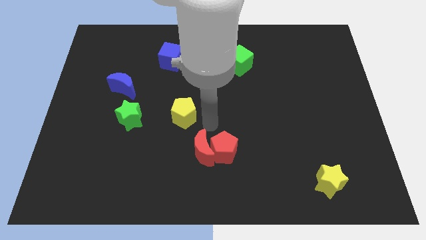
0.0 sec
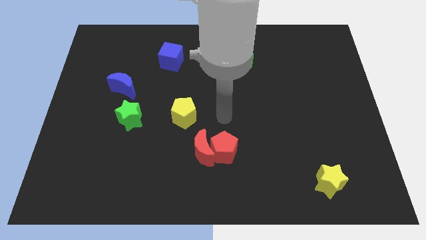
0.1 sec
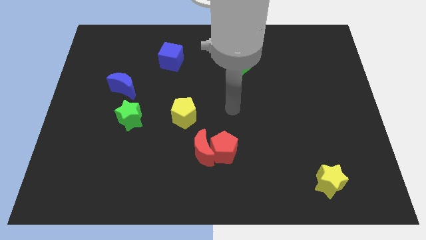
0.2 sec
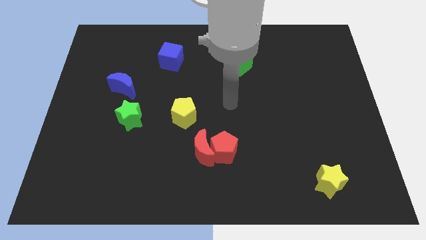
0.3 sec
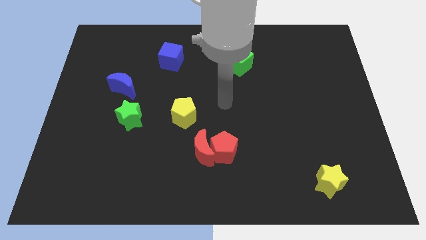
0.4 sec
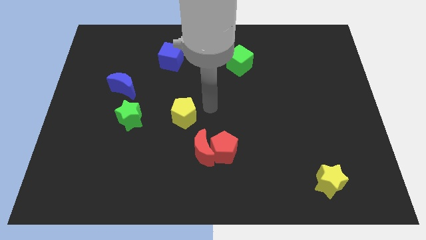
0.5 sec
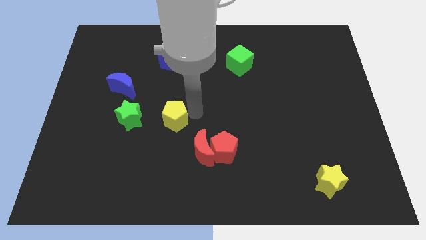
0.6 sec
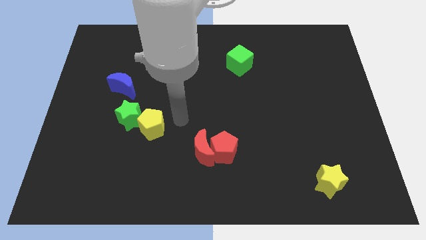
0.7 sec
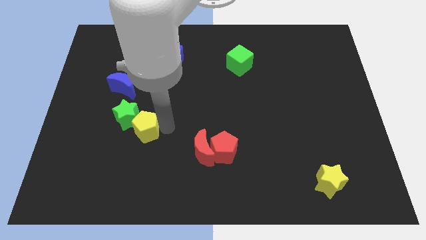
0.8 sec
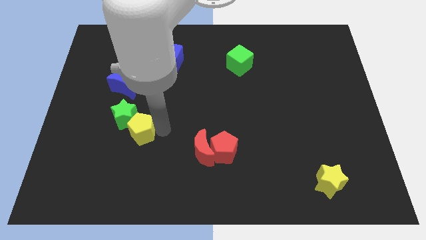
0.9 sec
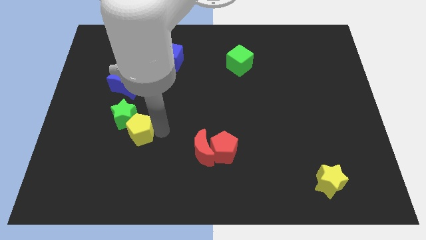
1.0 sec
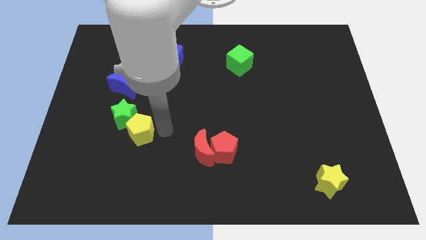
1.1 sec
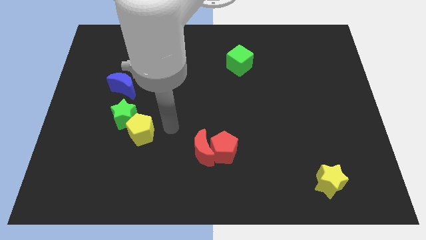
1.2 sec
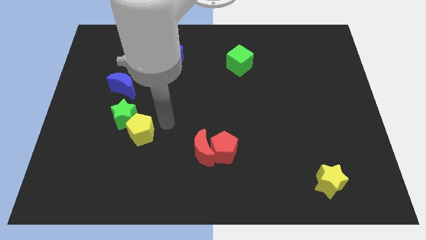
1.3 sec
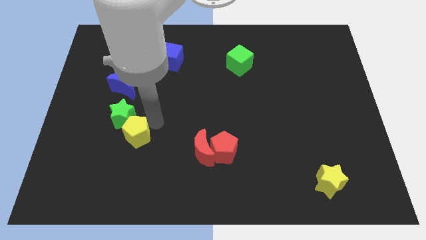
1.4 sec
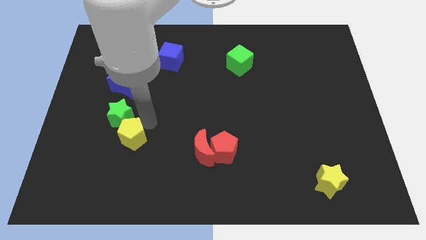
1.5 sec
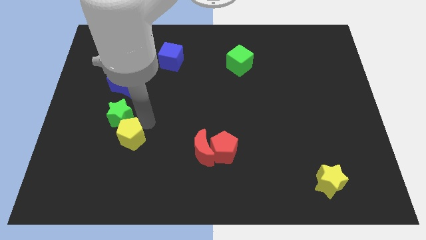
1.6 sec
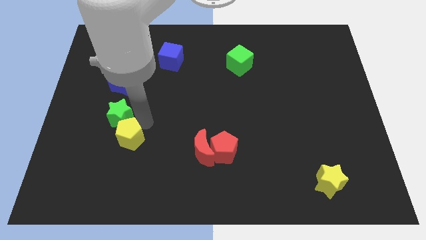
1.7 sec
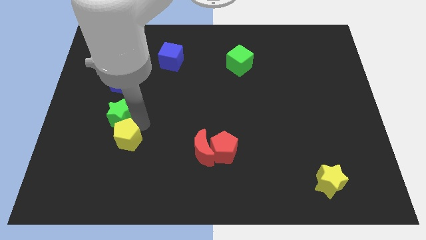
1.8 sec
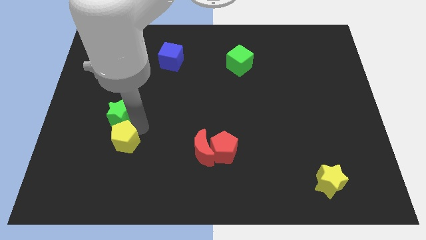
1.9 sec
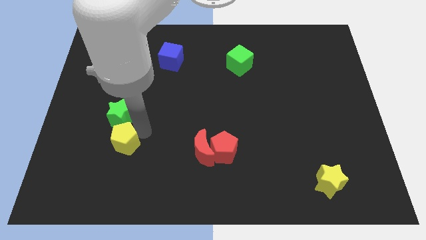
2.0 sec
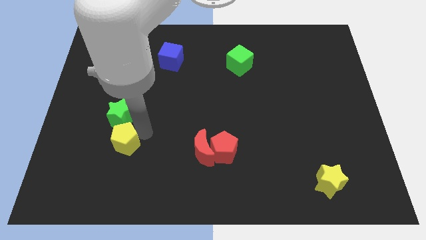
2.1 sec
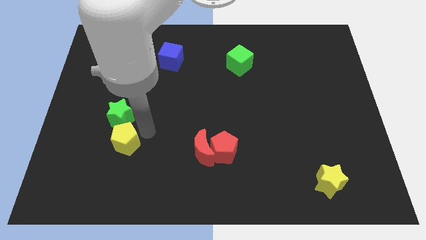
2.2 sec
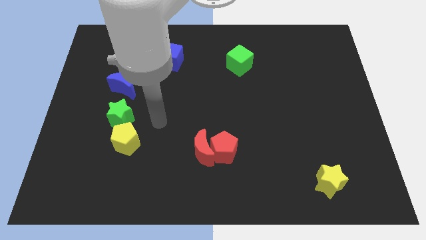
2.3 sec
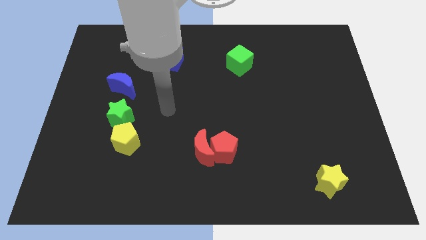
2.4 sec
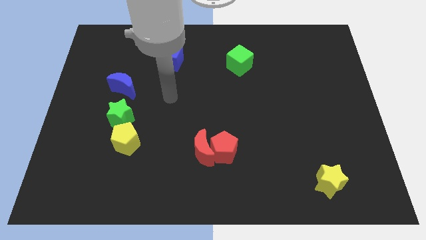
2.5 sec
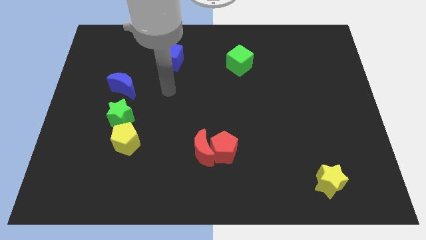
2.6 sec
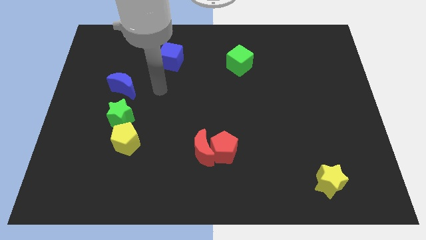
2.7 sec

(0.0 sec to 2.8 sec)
put yellow pentagon below green star

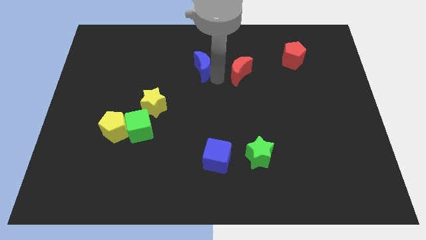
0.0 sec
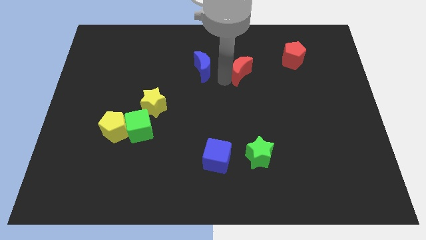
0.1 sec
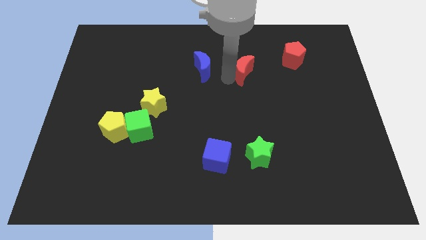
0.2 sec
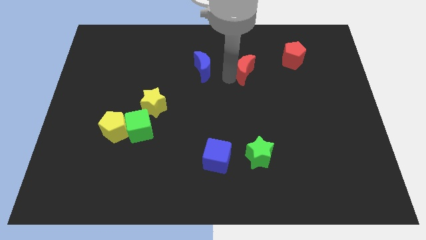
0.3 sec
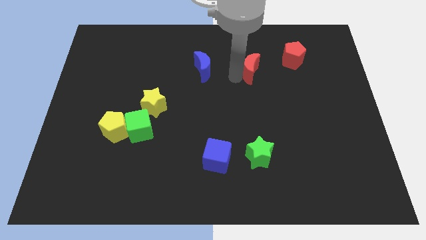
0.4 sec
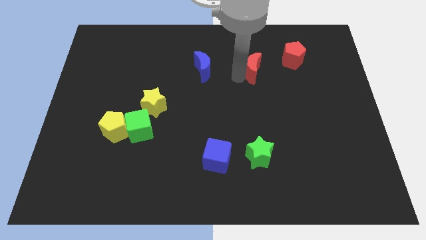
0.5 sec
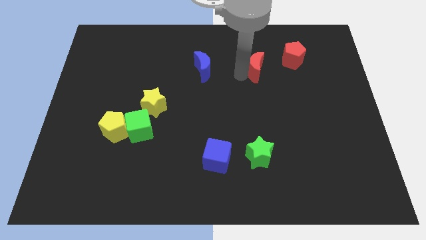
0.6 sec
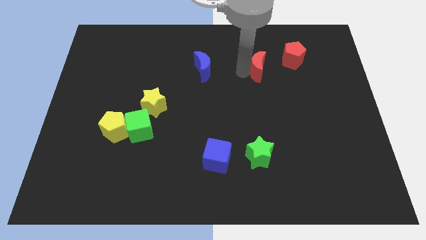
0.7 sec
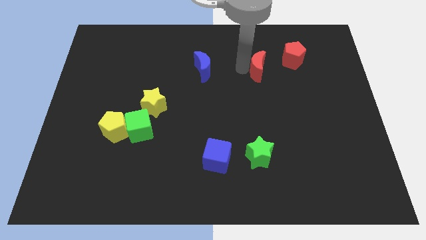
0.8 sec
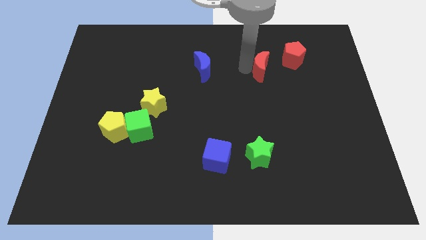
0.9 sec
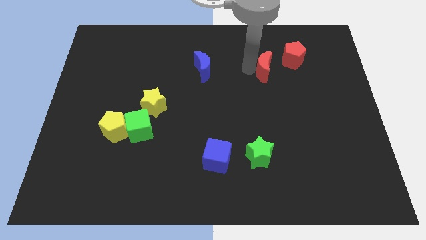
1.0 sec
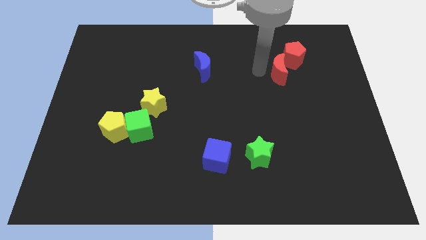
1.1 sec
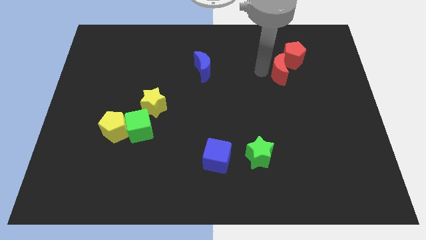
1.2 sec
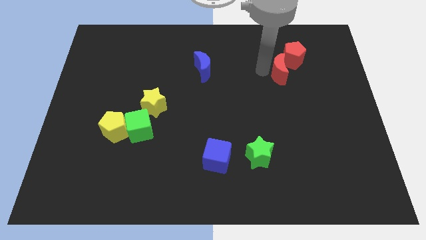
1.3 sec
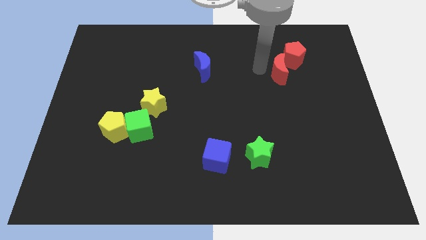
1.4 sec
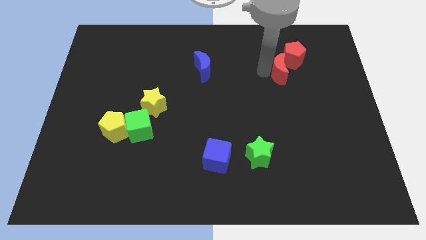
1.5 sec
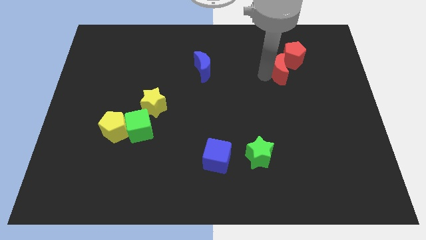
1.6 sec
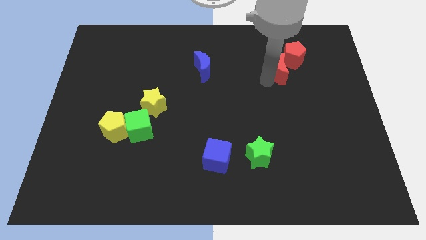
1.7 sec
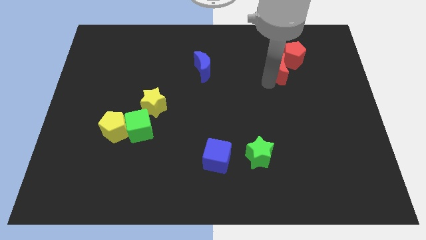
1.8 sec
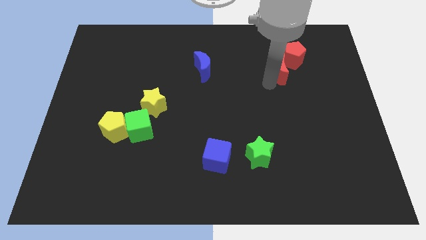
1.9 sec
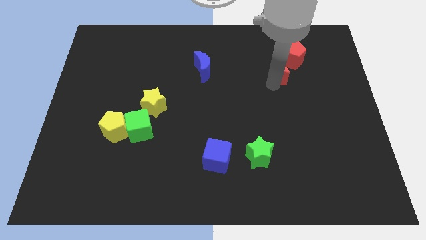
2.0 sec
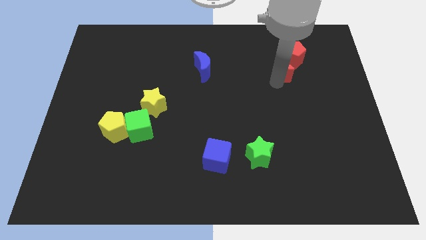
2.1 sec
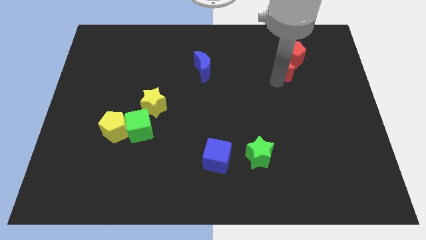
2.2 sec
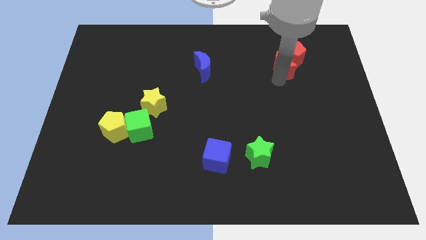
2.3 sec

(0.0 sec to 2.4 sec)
push the red crescent towards the right side of the board

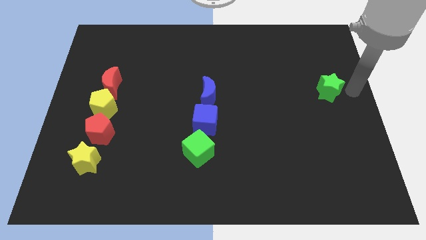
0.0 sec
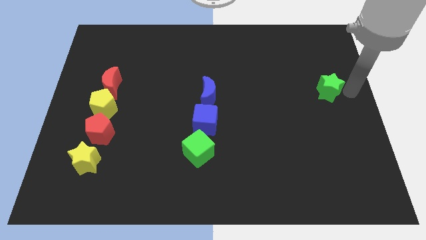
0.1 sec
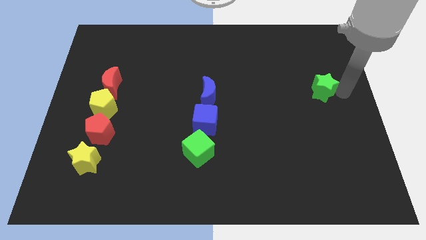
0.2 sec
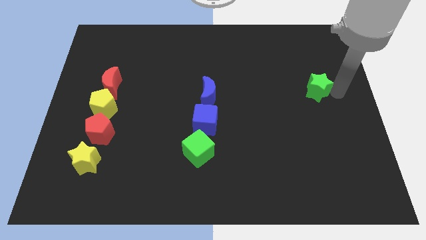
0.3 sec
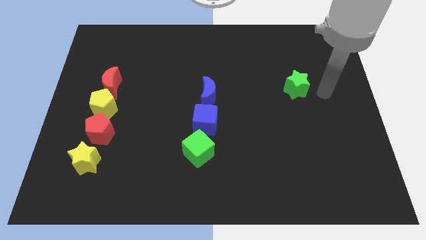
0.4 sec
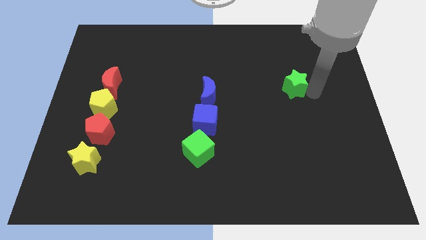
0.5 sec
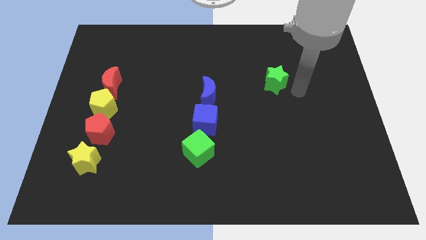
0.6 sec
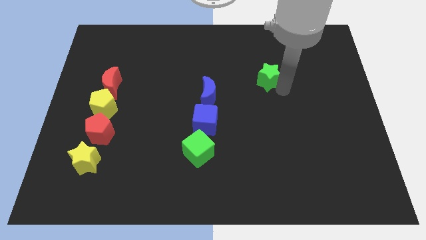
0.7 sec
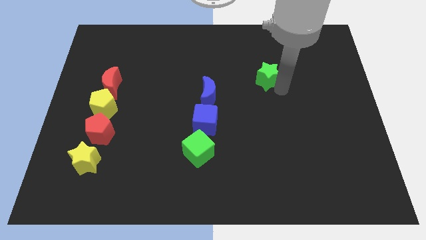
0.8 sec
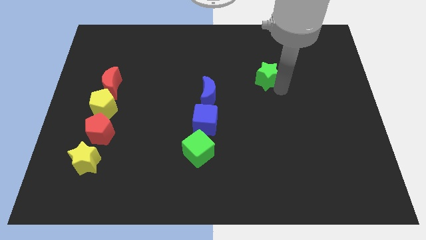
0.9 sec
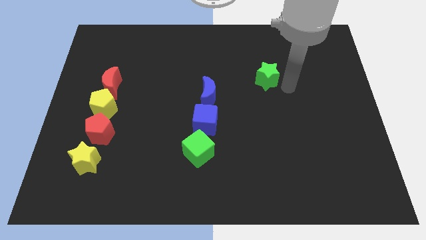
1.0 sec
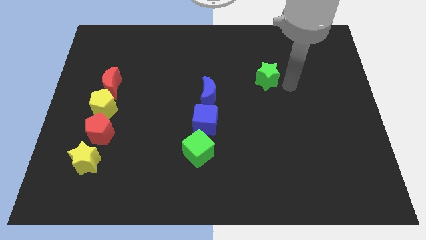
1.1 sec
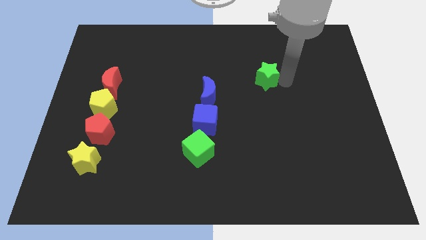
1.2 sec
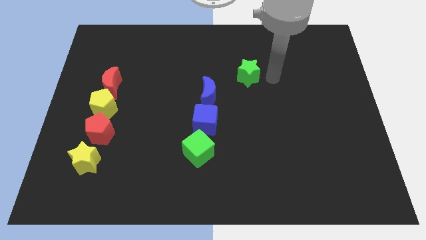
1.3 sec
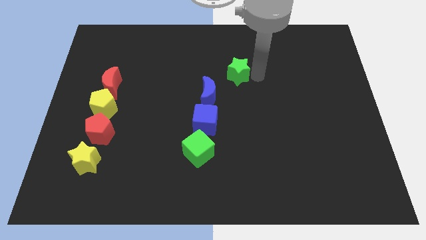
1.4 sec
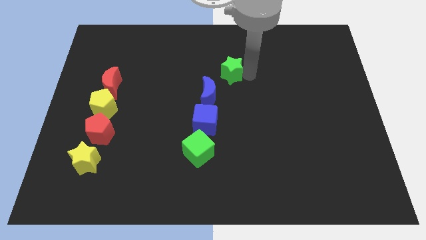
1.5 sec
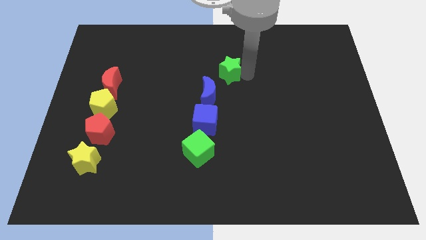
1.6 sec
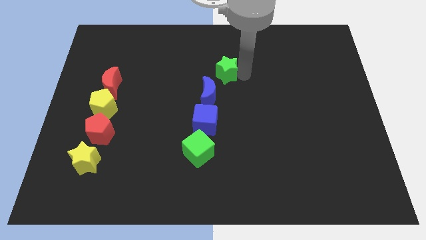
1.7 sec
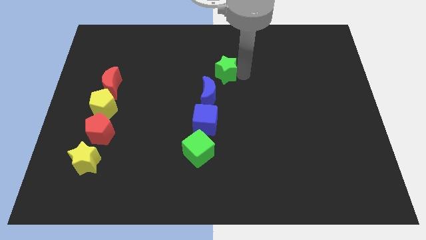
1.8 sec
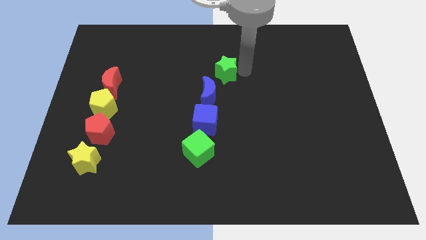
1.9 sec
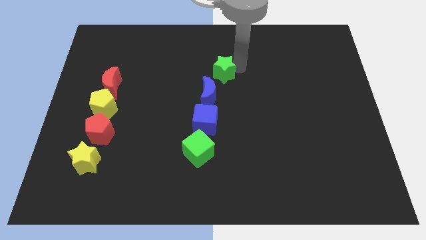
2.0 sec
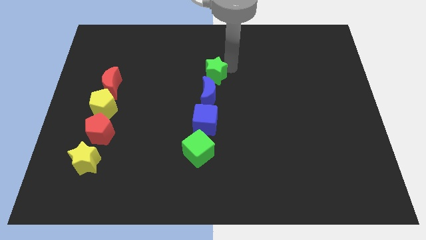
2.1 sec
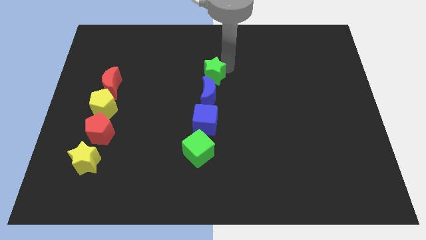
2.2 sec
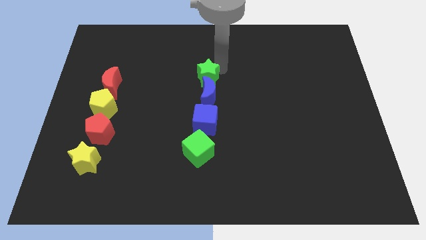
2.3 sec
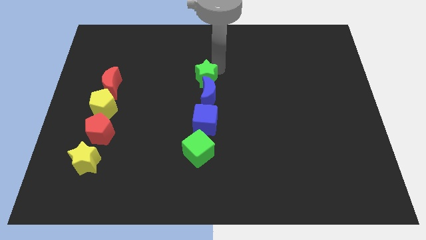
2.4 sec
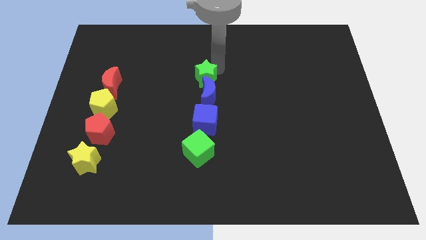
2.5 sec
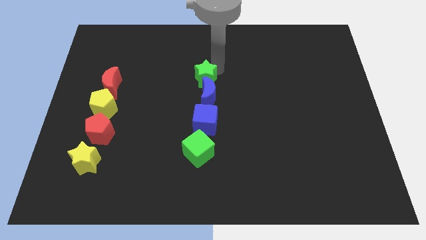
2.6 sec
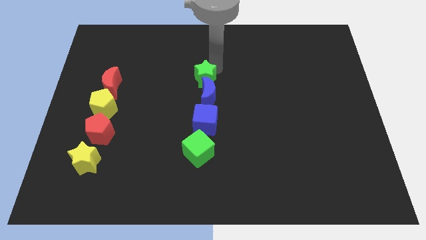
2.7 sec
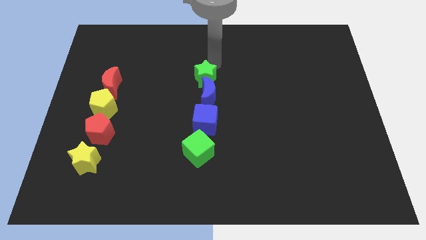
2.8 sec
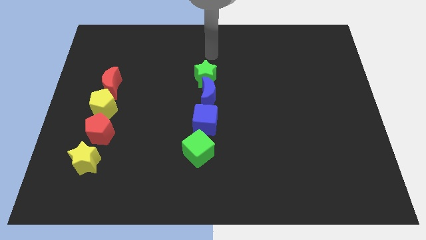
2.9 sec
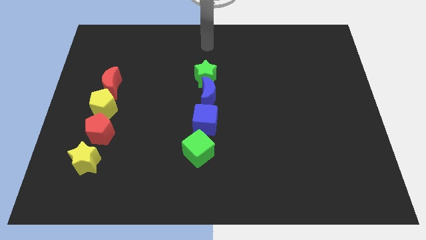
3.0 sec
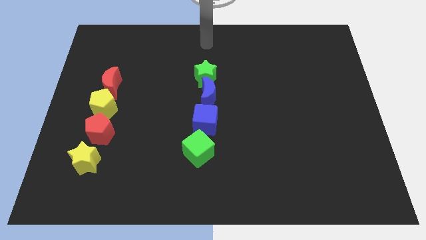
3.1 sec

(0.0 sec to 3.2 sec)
place the green star above the blue crescent

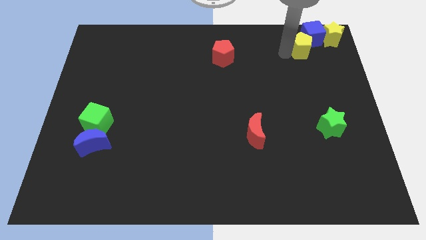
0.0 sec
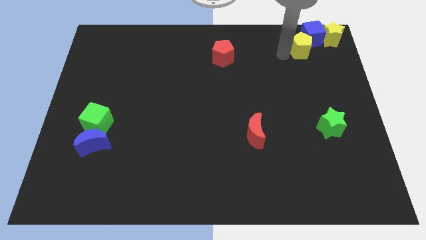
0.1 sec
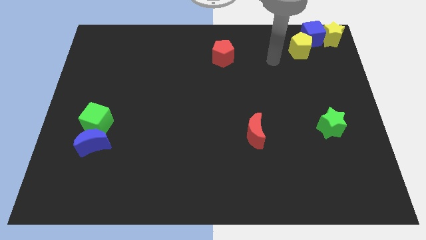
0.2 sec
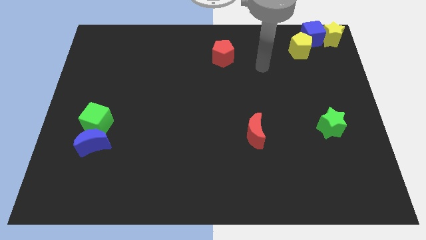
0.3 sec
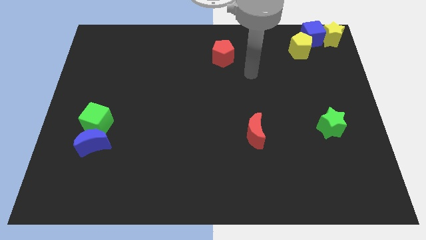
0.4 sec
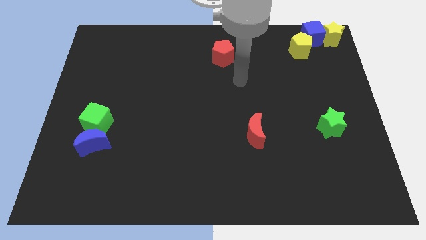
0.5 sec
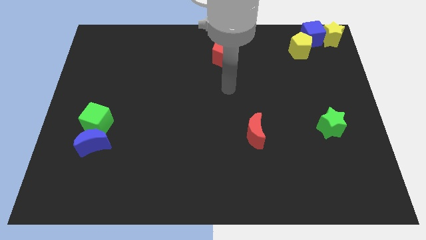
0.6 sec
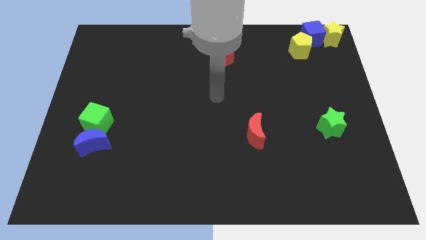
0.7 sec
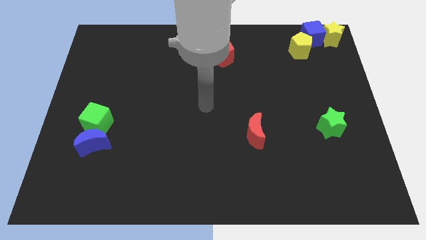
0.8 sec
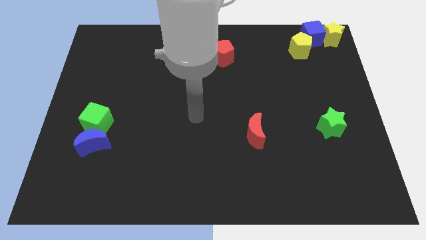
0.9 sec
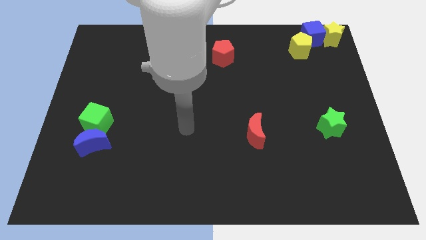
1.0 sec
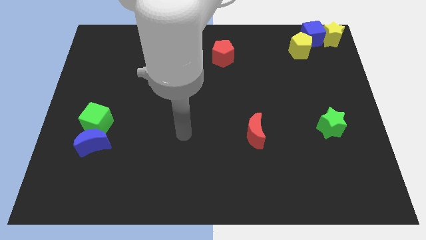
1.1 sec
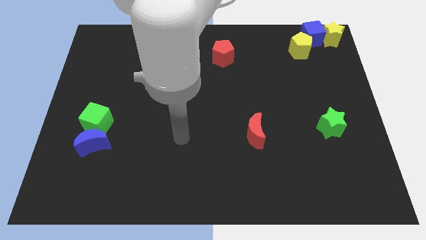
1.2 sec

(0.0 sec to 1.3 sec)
move the arm away from the yellow pentagon
